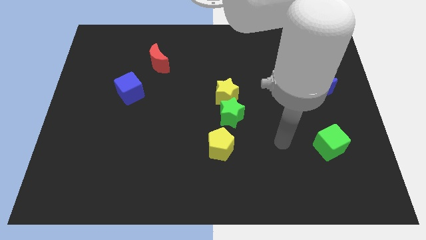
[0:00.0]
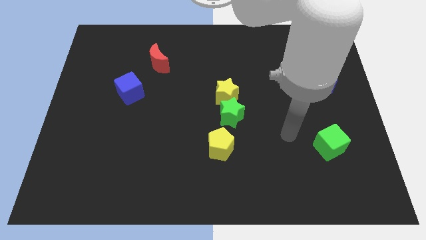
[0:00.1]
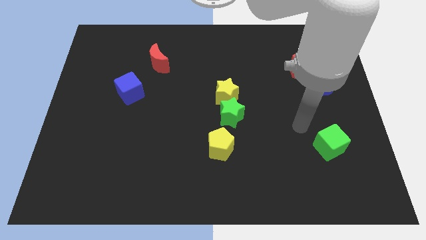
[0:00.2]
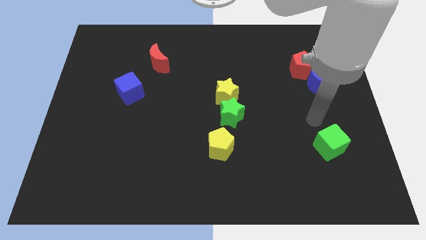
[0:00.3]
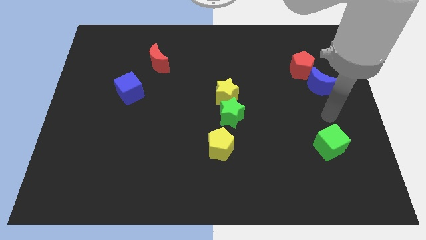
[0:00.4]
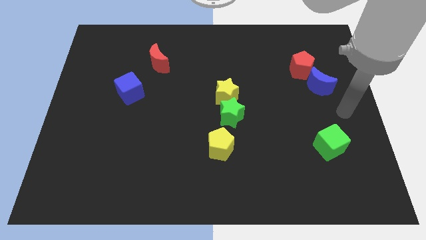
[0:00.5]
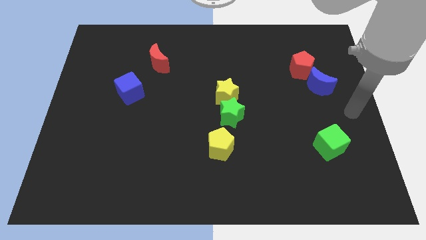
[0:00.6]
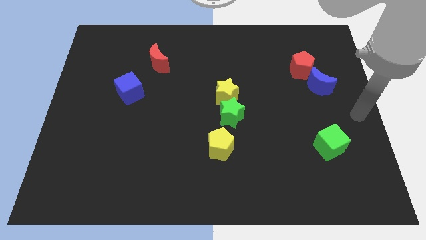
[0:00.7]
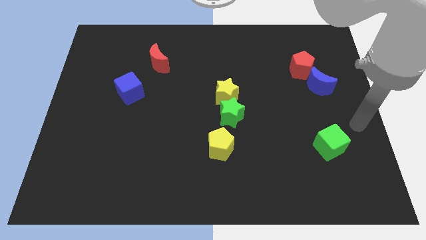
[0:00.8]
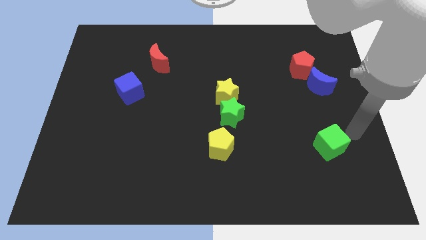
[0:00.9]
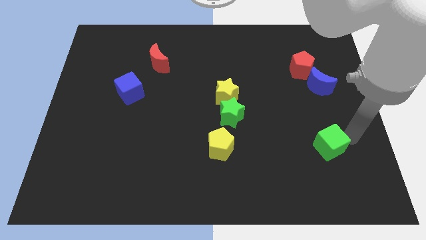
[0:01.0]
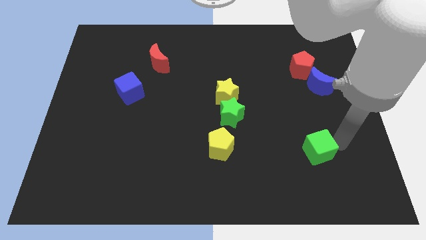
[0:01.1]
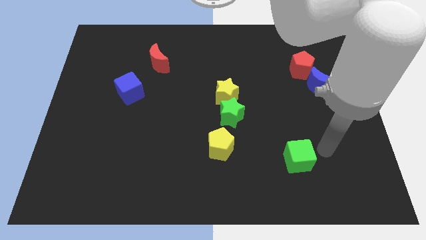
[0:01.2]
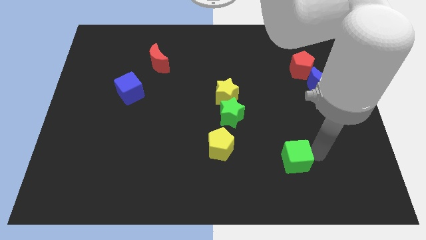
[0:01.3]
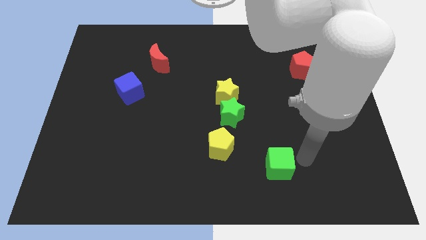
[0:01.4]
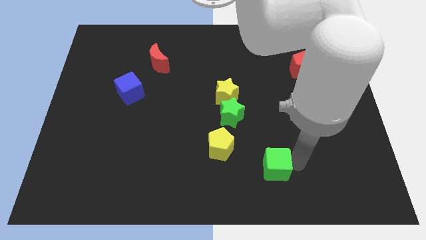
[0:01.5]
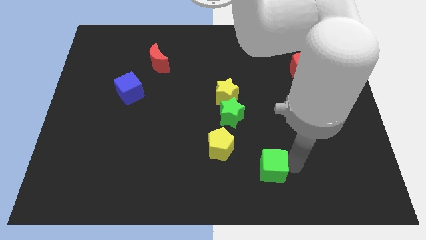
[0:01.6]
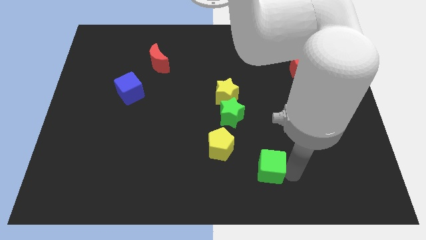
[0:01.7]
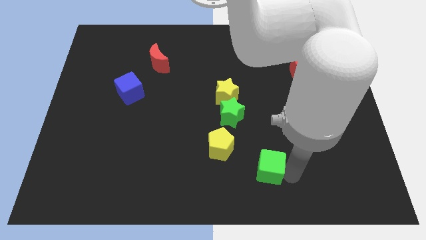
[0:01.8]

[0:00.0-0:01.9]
slide the green cube towards the bottom center

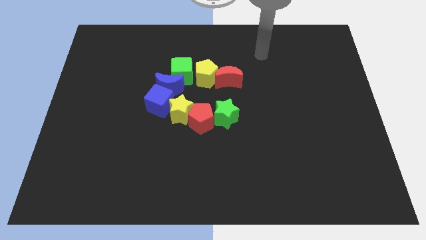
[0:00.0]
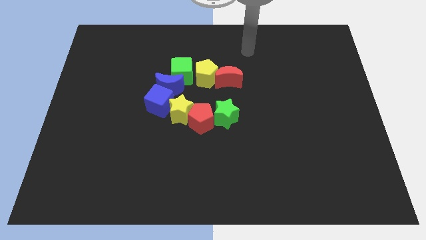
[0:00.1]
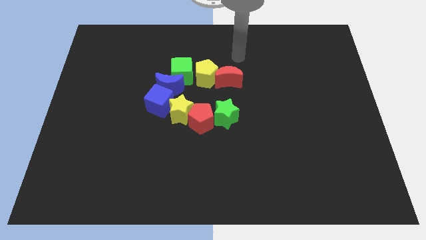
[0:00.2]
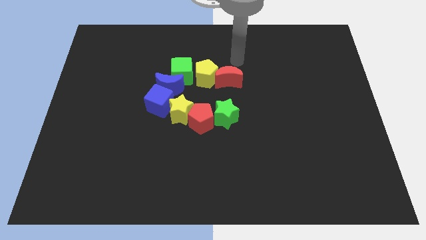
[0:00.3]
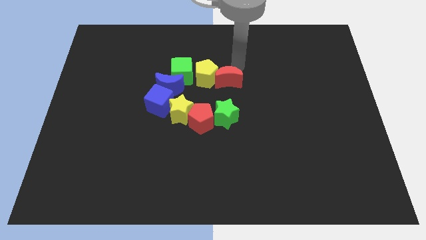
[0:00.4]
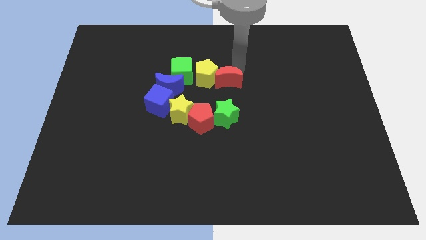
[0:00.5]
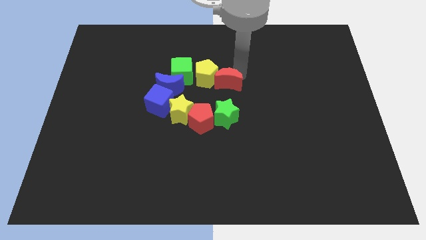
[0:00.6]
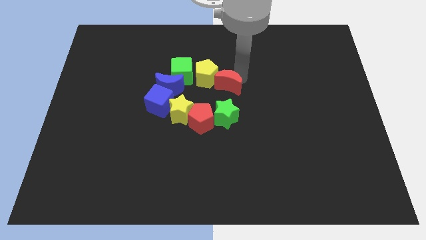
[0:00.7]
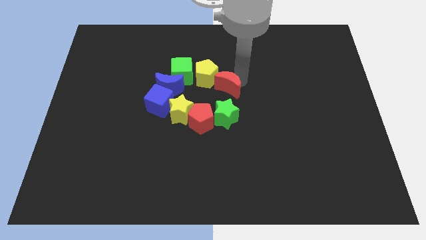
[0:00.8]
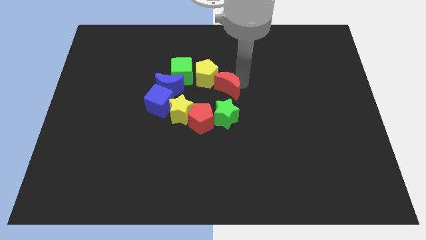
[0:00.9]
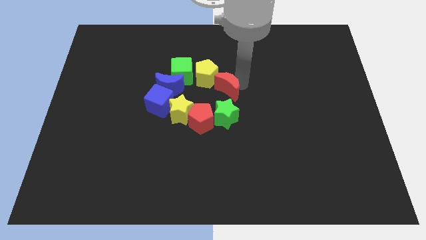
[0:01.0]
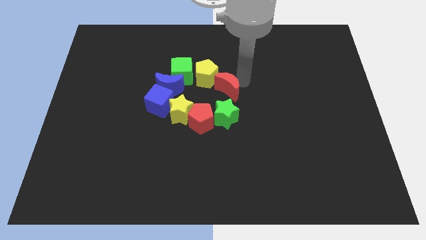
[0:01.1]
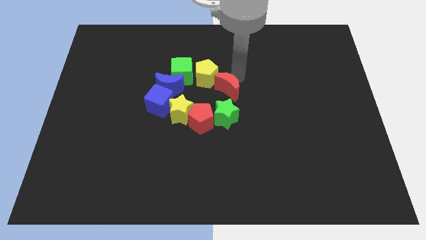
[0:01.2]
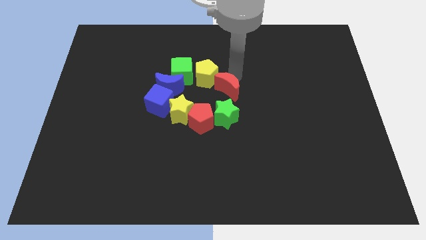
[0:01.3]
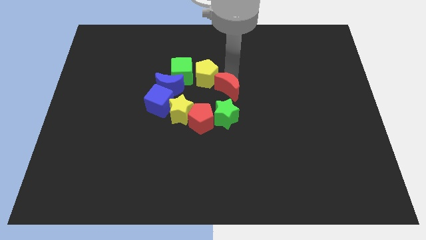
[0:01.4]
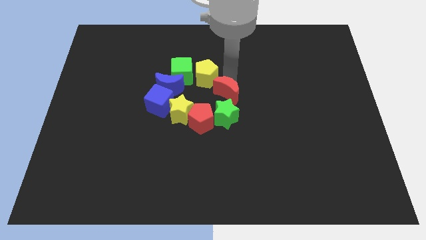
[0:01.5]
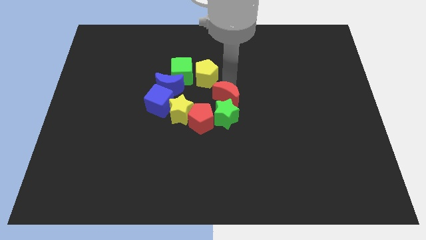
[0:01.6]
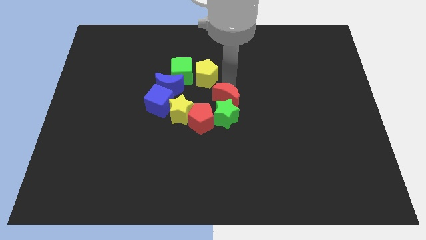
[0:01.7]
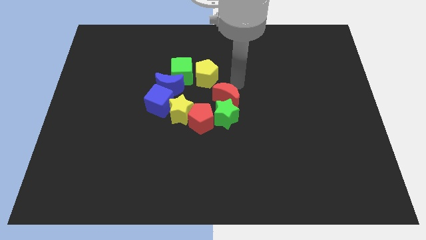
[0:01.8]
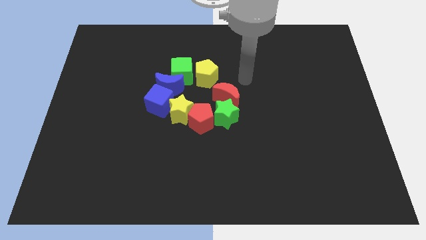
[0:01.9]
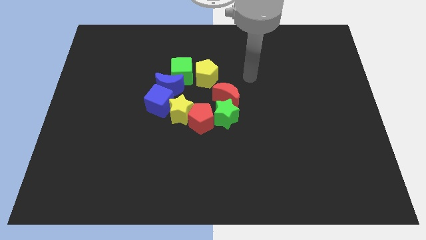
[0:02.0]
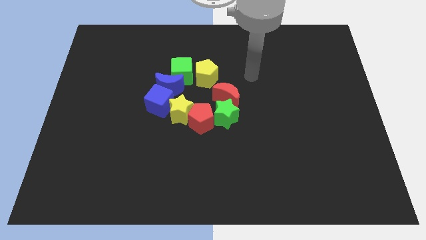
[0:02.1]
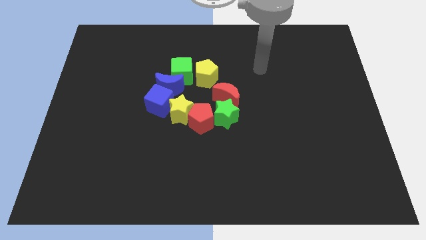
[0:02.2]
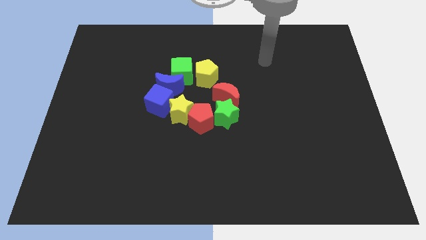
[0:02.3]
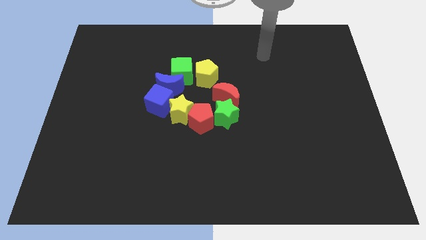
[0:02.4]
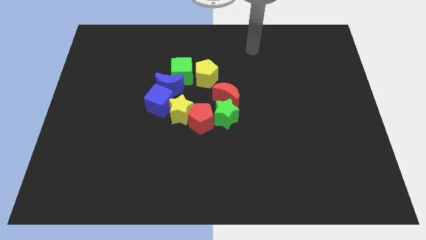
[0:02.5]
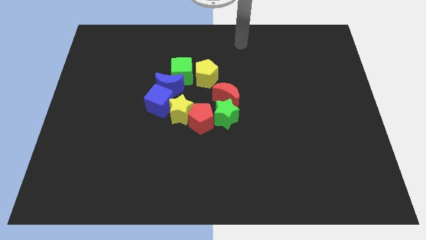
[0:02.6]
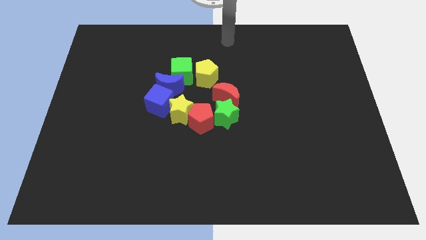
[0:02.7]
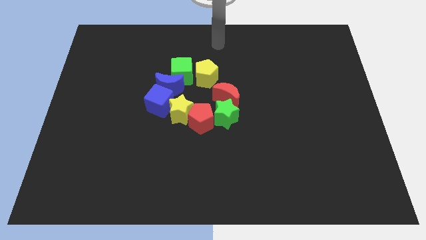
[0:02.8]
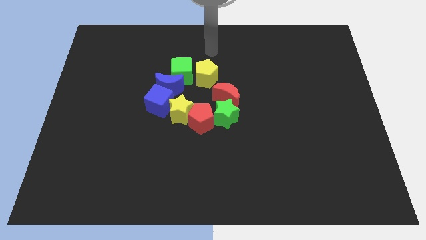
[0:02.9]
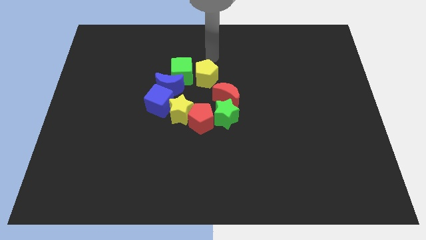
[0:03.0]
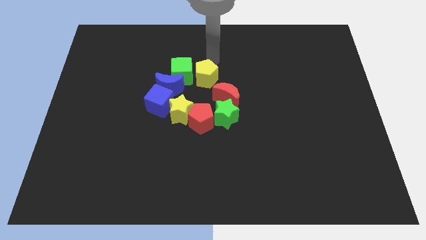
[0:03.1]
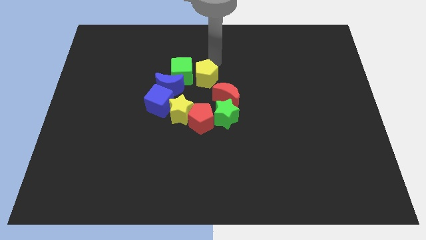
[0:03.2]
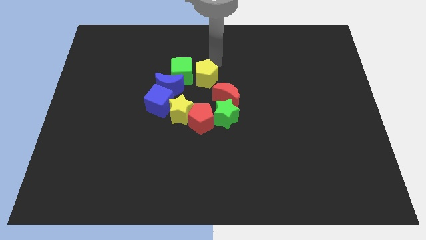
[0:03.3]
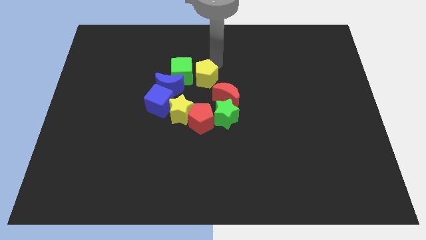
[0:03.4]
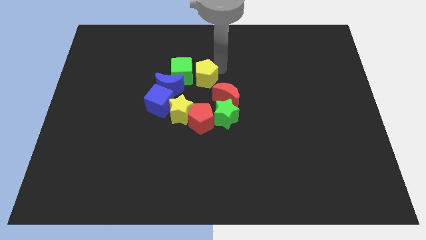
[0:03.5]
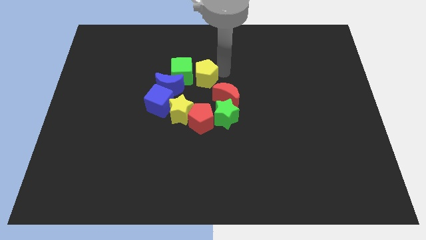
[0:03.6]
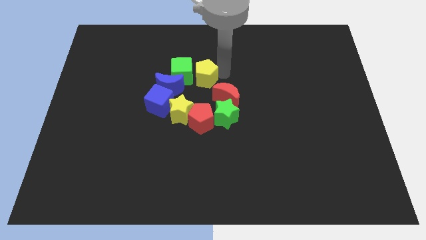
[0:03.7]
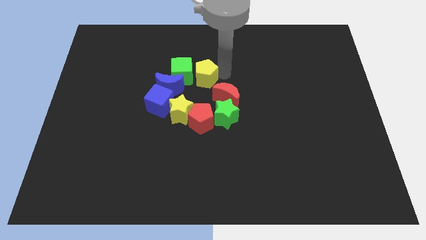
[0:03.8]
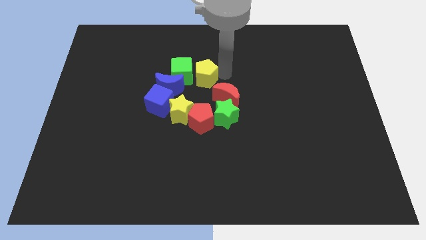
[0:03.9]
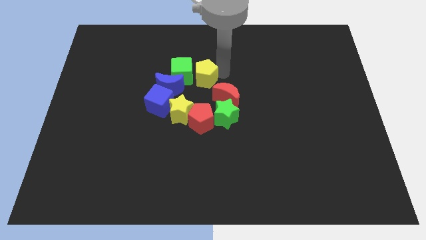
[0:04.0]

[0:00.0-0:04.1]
place your arm towards the right side of the yellow pentagon

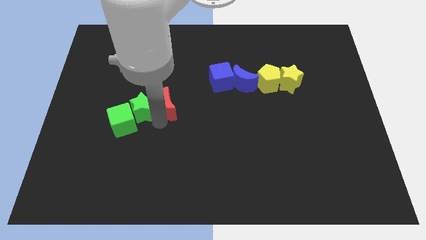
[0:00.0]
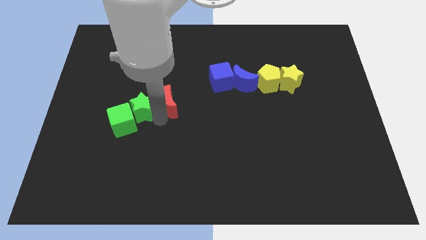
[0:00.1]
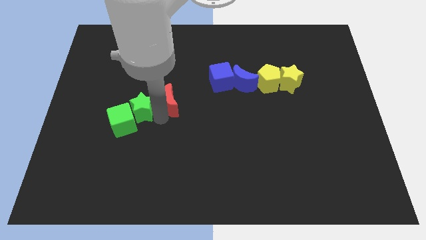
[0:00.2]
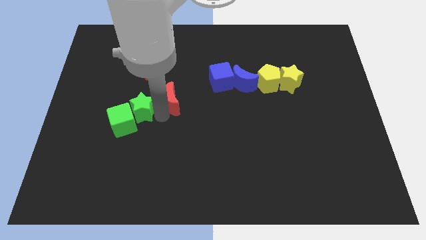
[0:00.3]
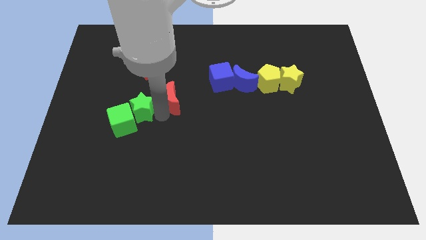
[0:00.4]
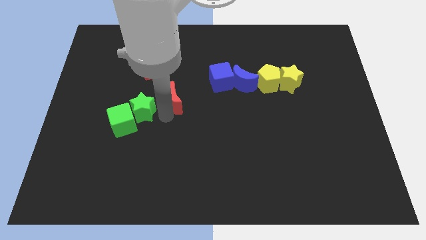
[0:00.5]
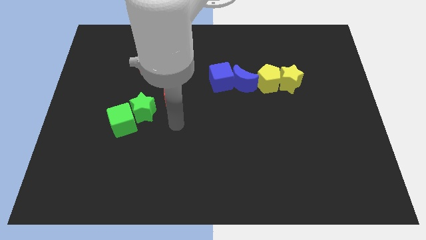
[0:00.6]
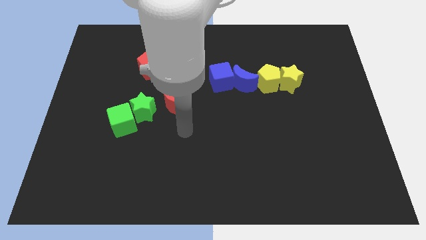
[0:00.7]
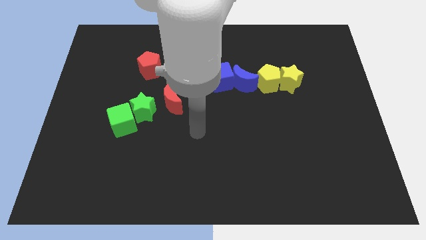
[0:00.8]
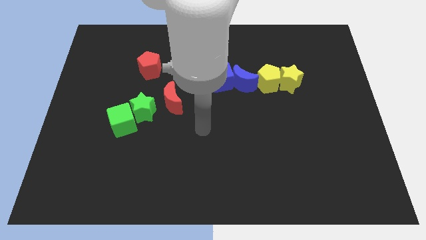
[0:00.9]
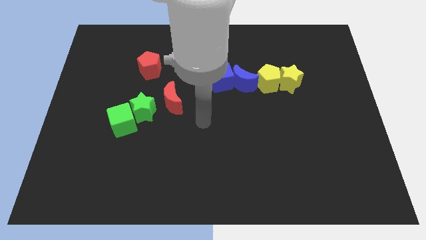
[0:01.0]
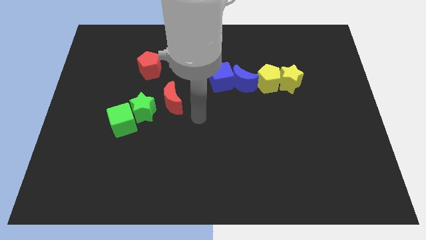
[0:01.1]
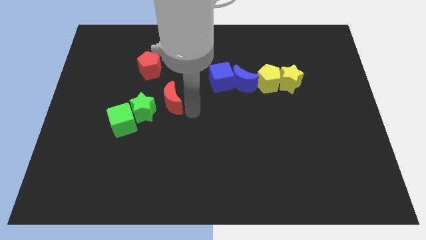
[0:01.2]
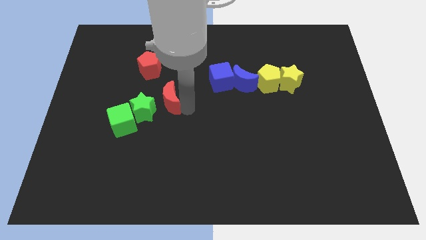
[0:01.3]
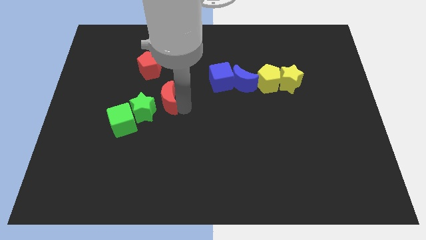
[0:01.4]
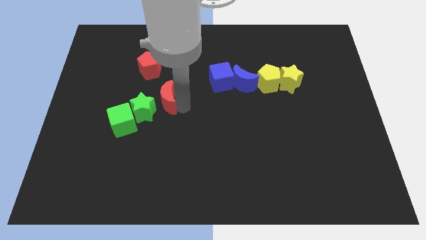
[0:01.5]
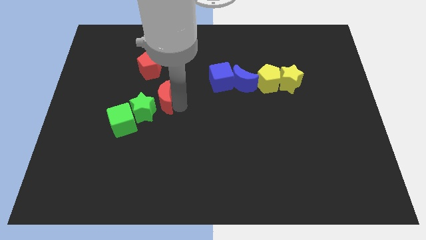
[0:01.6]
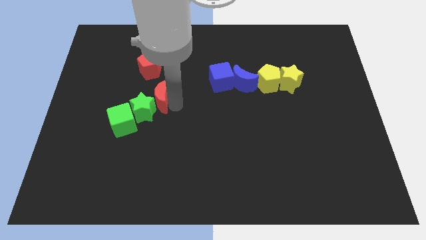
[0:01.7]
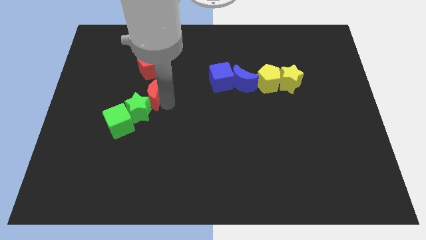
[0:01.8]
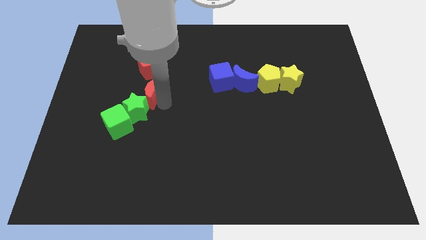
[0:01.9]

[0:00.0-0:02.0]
place red moon below the red pentagon

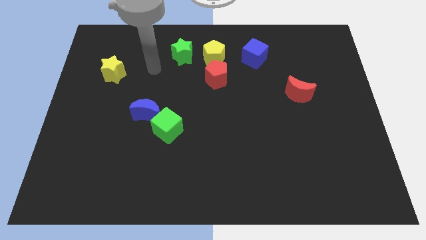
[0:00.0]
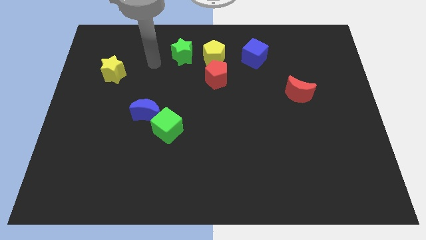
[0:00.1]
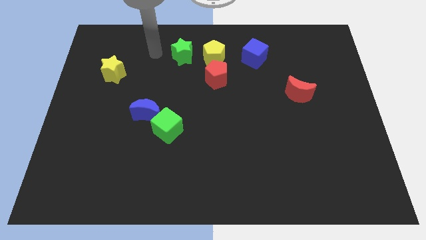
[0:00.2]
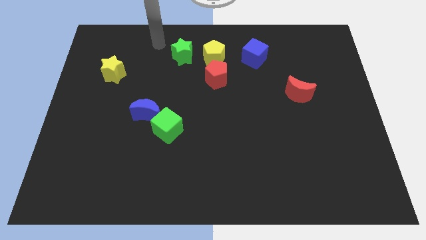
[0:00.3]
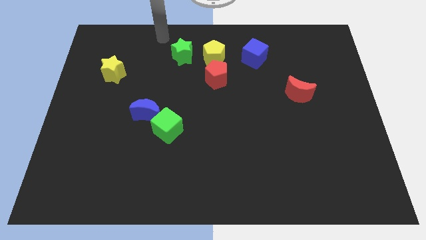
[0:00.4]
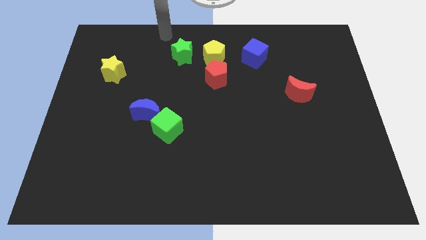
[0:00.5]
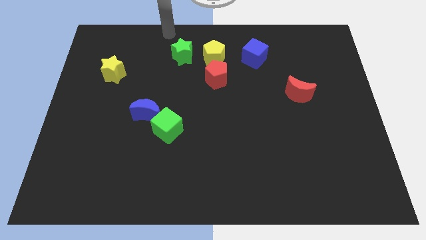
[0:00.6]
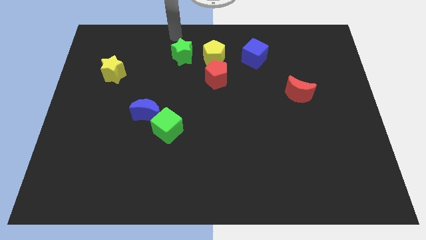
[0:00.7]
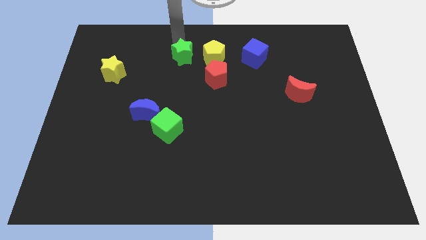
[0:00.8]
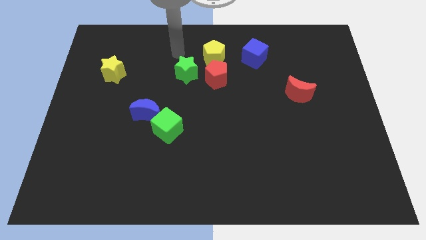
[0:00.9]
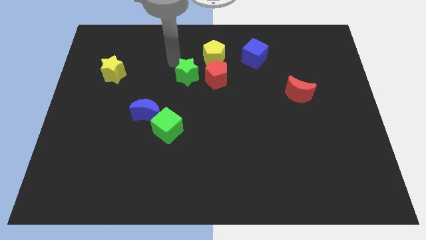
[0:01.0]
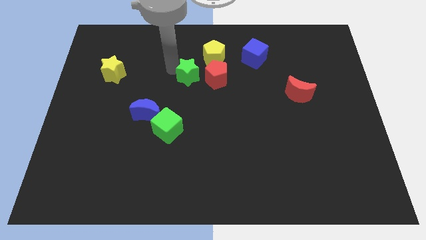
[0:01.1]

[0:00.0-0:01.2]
move the green star to the left of the red pentagon
